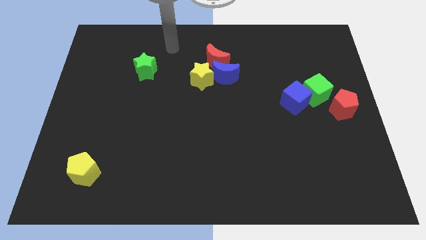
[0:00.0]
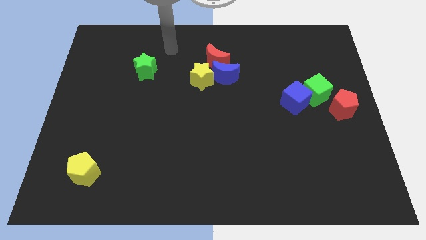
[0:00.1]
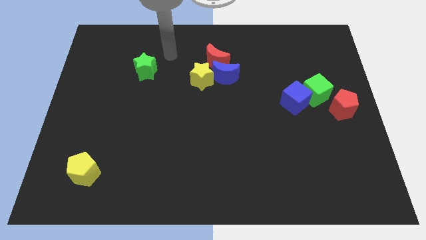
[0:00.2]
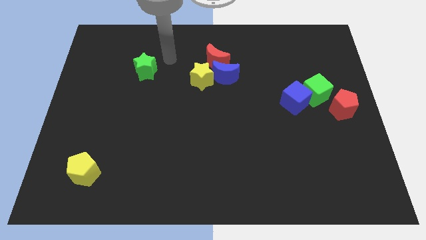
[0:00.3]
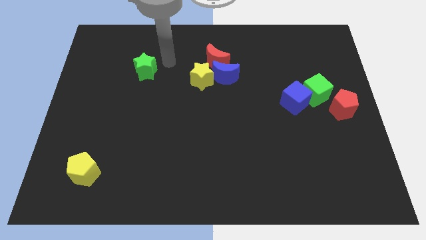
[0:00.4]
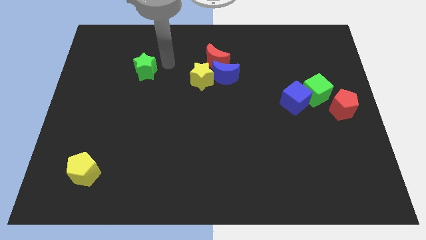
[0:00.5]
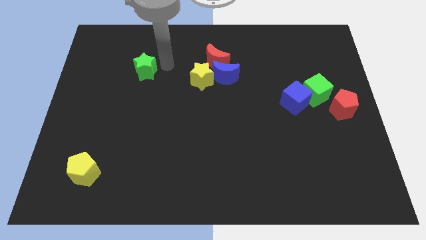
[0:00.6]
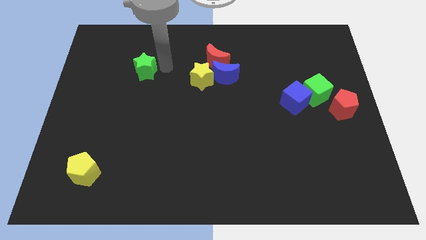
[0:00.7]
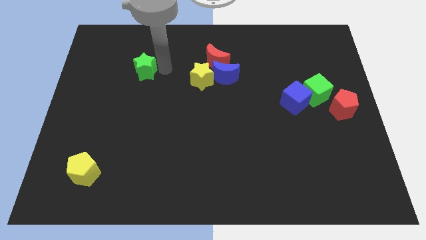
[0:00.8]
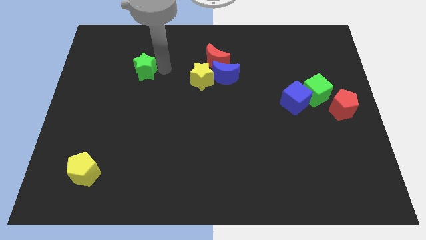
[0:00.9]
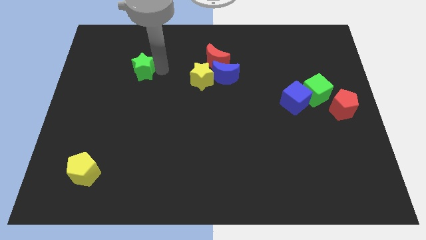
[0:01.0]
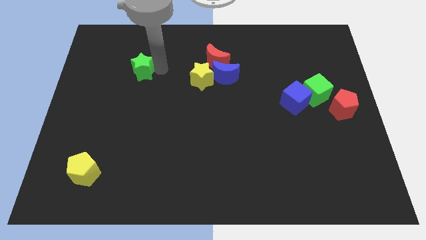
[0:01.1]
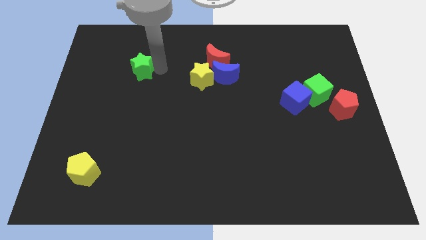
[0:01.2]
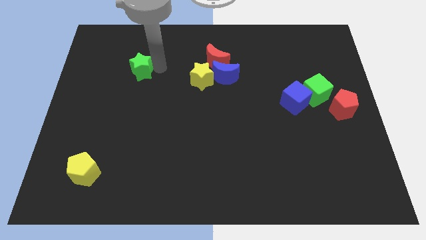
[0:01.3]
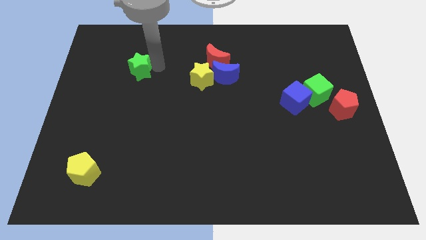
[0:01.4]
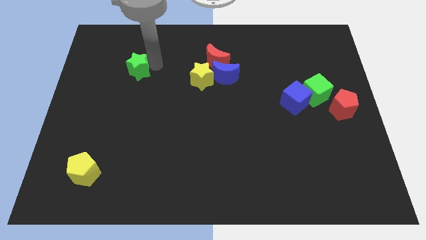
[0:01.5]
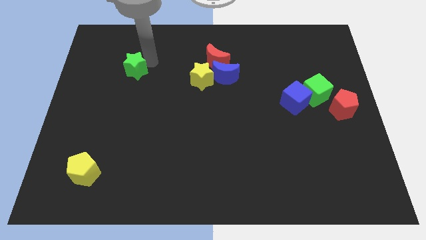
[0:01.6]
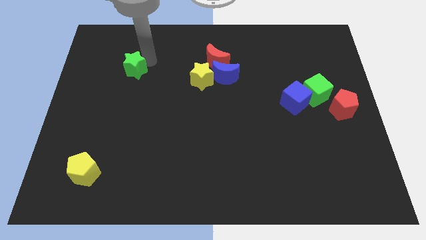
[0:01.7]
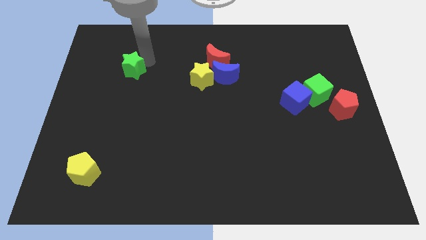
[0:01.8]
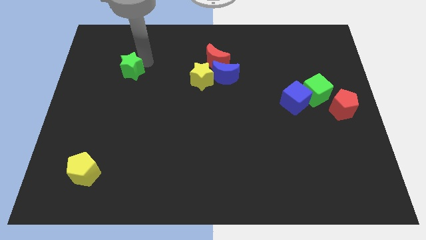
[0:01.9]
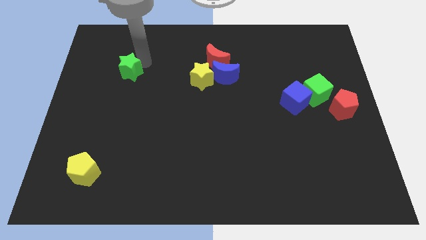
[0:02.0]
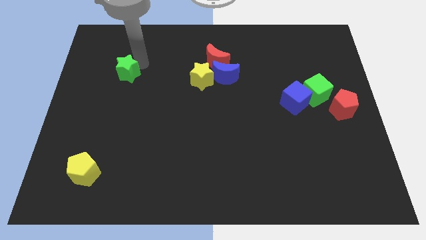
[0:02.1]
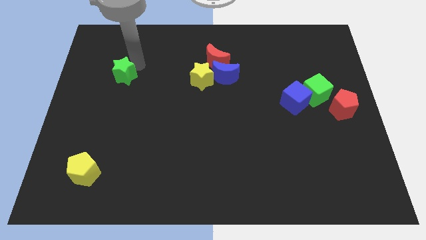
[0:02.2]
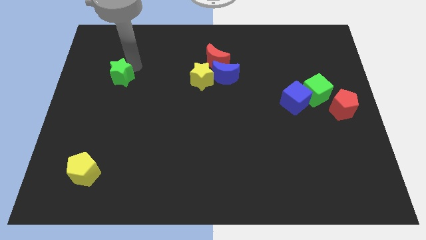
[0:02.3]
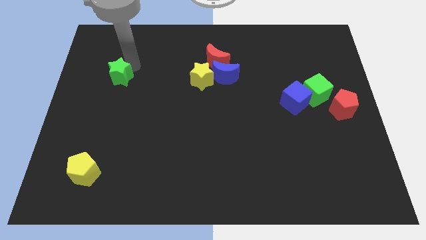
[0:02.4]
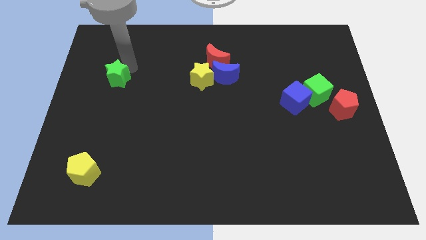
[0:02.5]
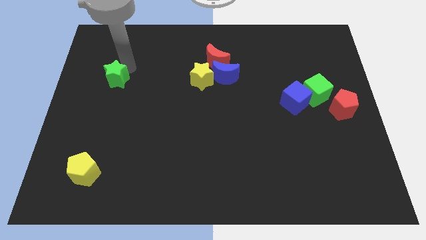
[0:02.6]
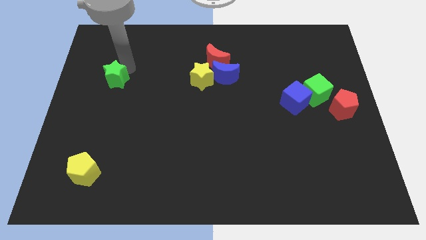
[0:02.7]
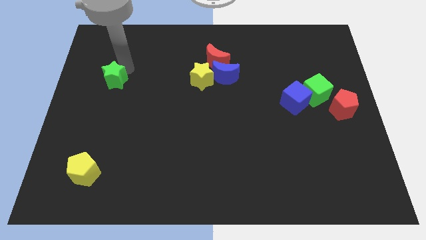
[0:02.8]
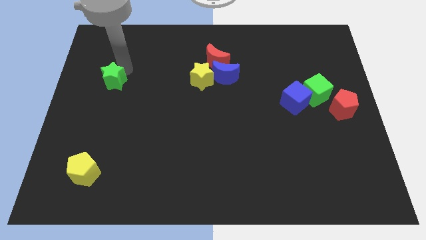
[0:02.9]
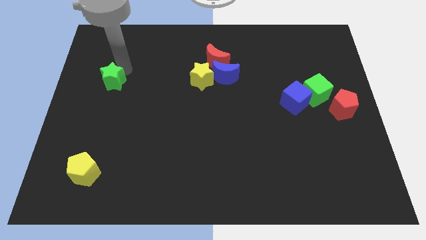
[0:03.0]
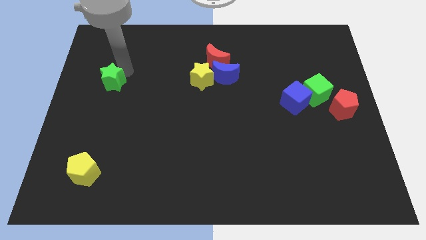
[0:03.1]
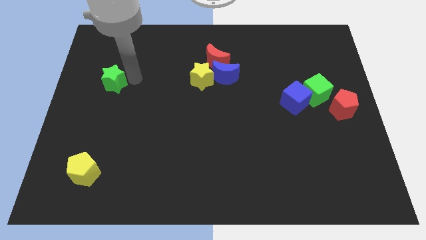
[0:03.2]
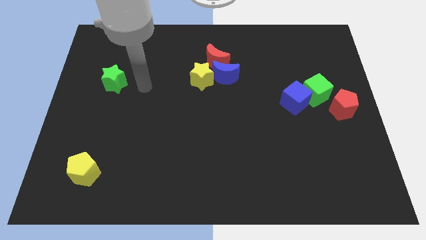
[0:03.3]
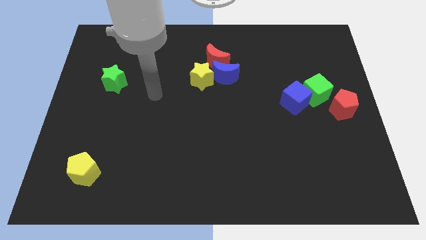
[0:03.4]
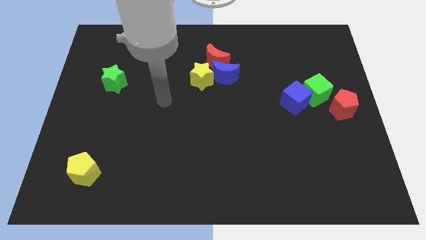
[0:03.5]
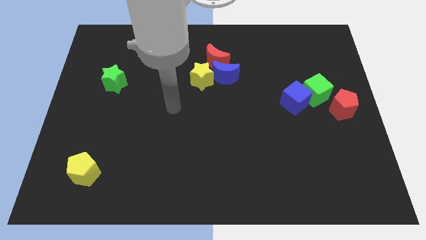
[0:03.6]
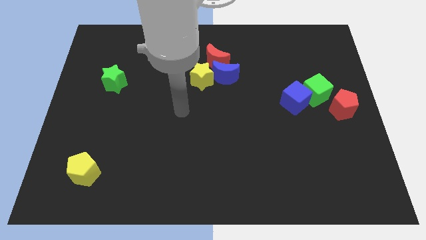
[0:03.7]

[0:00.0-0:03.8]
move the green star vertically above the yellow pentagon

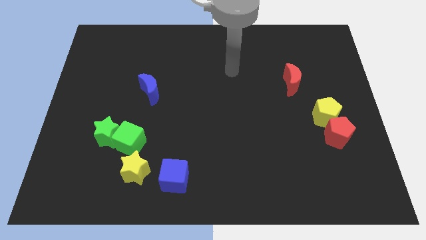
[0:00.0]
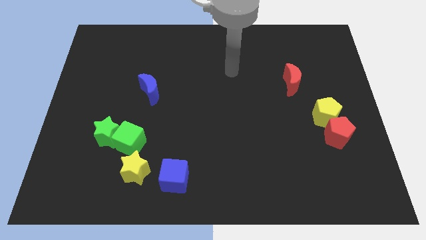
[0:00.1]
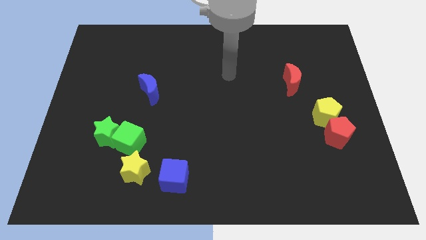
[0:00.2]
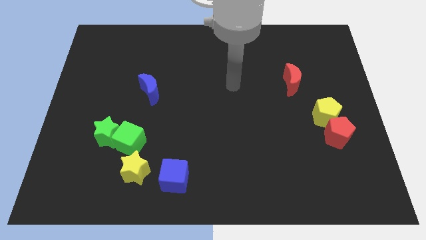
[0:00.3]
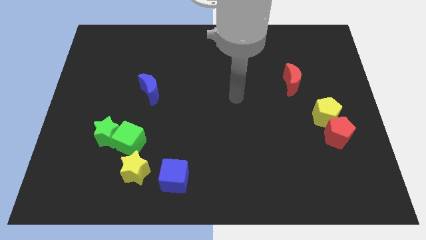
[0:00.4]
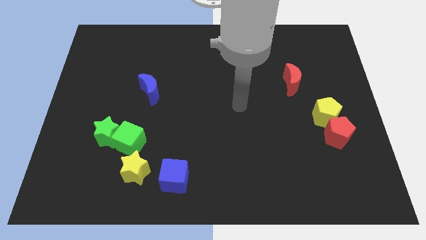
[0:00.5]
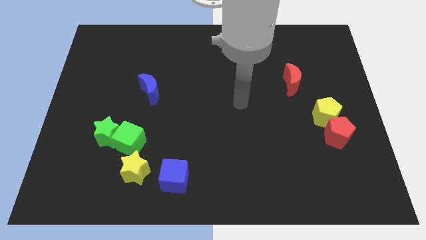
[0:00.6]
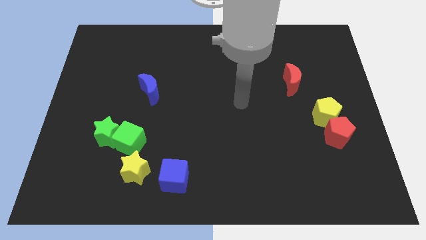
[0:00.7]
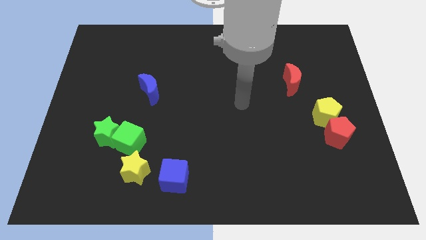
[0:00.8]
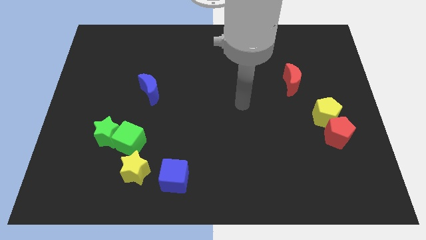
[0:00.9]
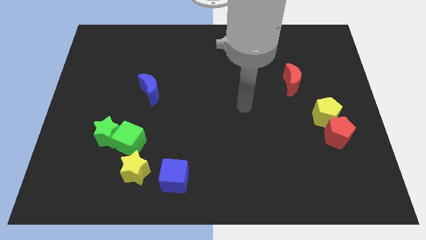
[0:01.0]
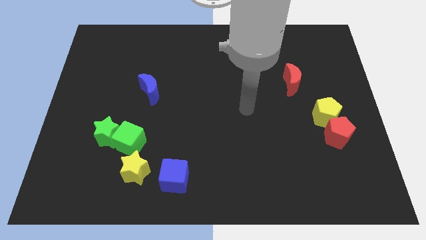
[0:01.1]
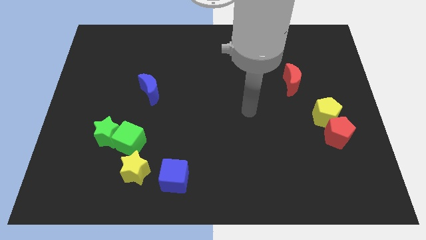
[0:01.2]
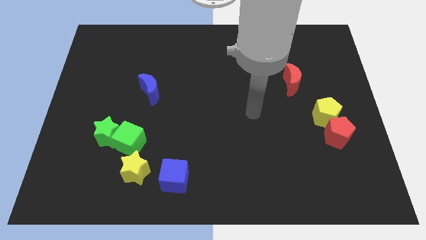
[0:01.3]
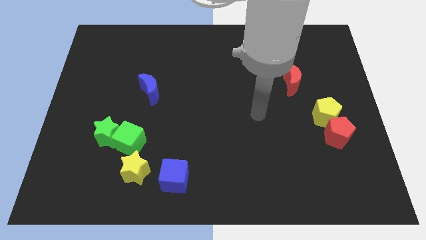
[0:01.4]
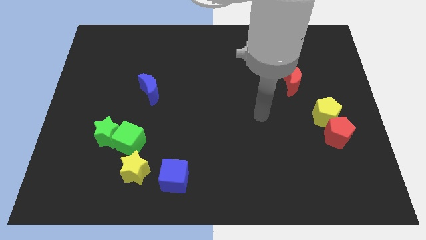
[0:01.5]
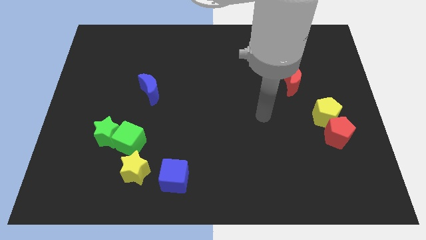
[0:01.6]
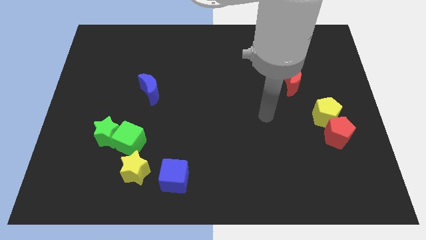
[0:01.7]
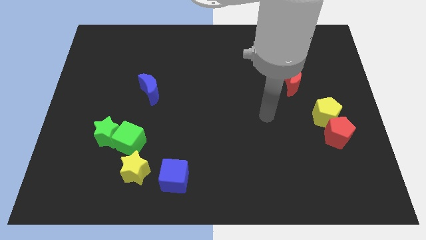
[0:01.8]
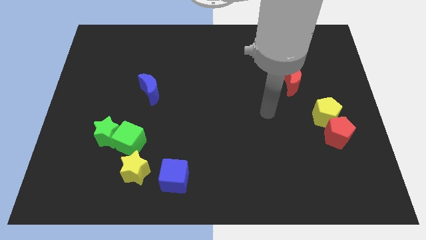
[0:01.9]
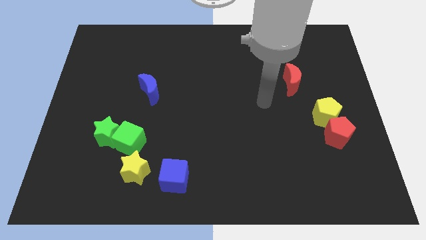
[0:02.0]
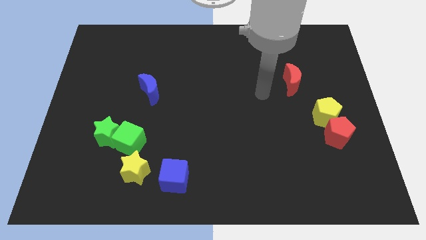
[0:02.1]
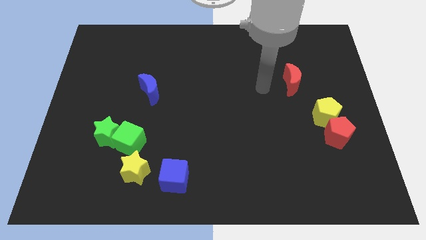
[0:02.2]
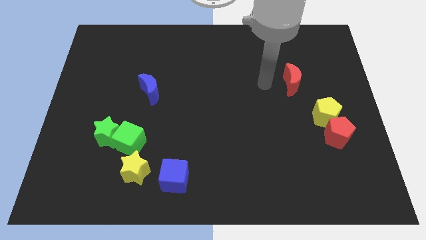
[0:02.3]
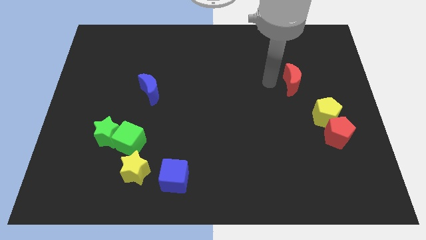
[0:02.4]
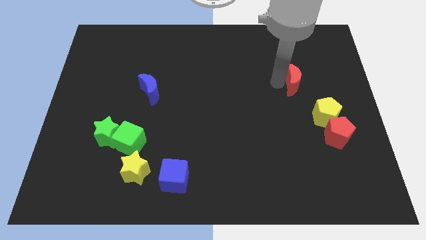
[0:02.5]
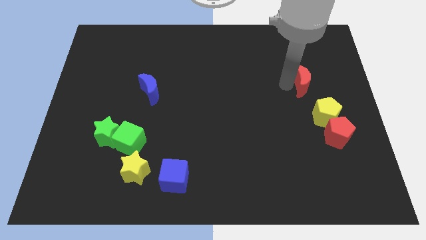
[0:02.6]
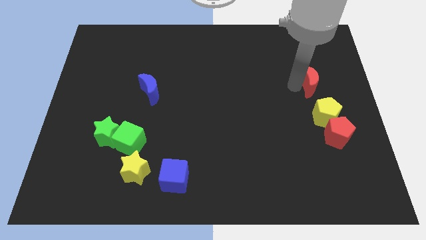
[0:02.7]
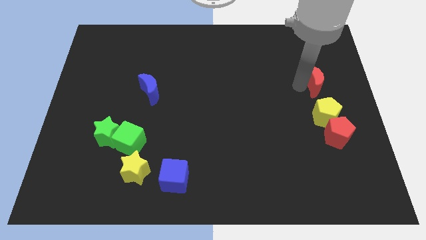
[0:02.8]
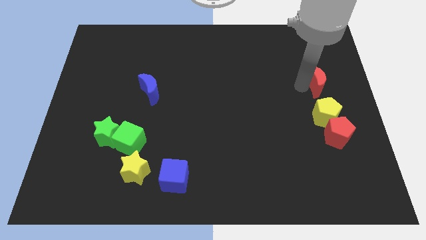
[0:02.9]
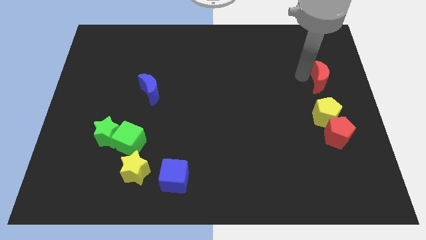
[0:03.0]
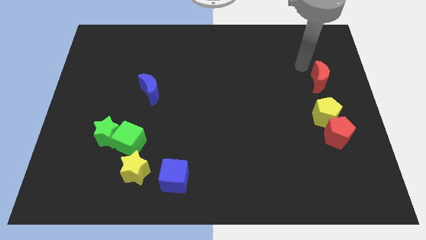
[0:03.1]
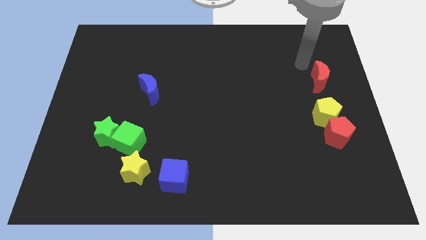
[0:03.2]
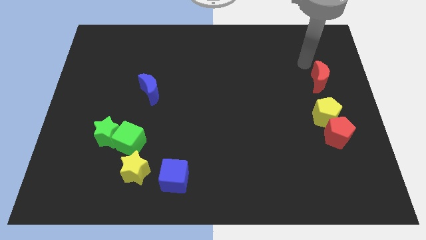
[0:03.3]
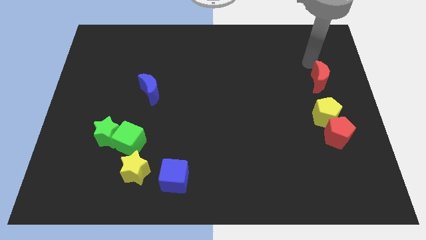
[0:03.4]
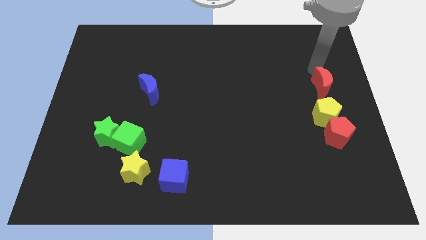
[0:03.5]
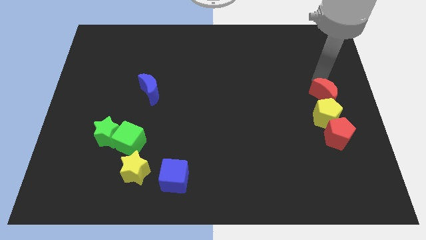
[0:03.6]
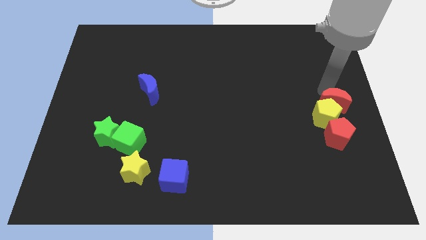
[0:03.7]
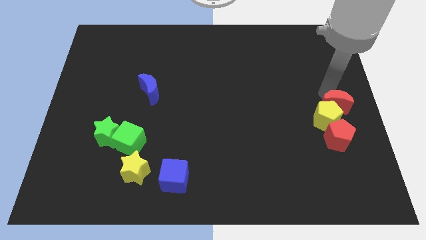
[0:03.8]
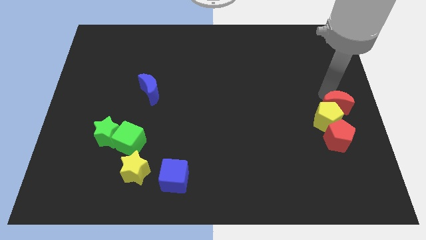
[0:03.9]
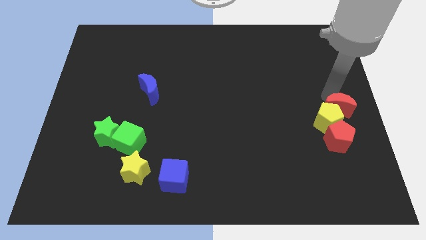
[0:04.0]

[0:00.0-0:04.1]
push the red moon into the yellow pentagon

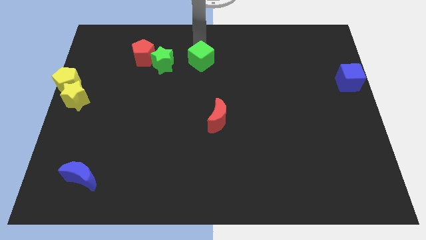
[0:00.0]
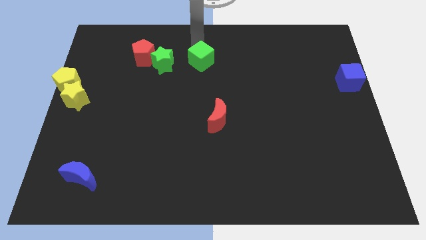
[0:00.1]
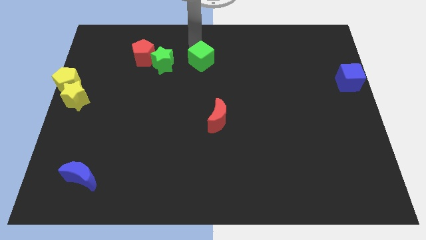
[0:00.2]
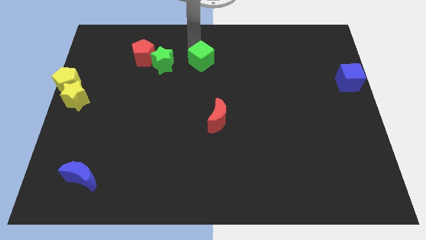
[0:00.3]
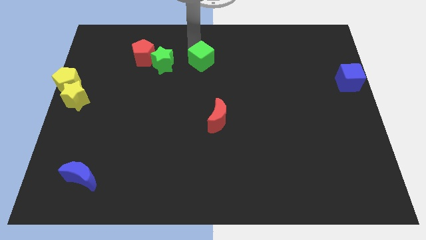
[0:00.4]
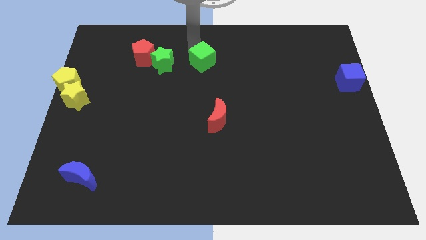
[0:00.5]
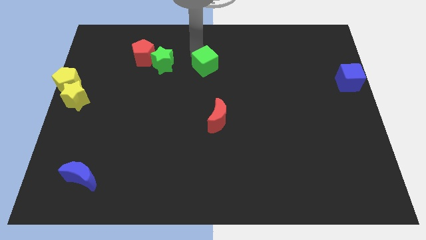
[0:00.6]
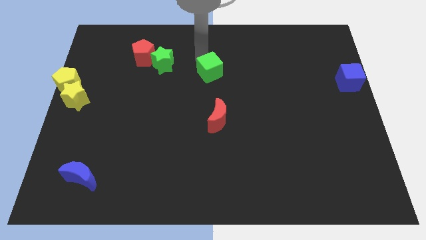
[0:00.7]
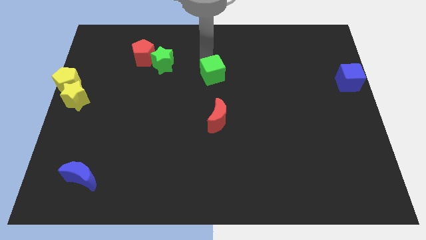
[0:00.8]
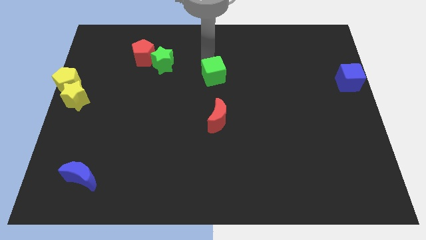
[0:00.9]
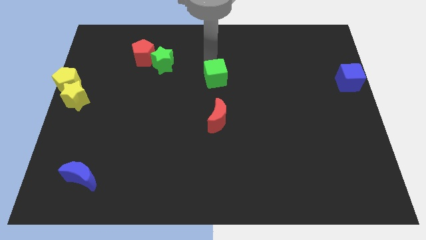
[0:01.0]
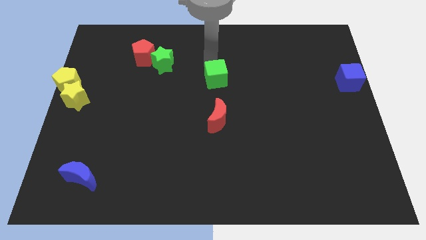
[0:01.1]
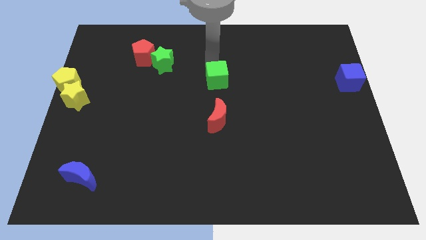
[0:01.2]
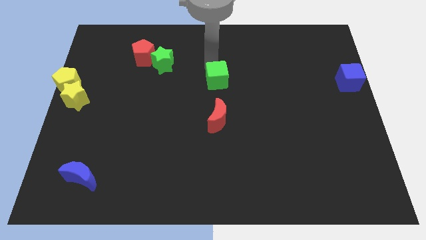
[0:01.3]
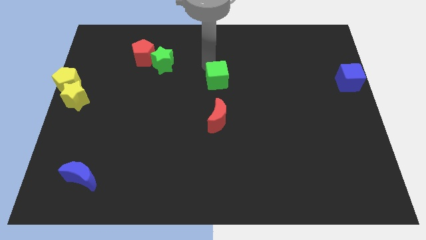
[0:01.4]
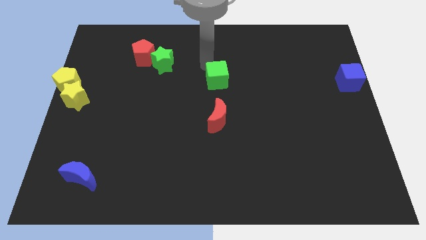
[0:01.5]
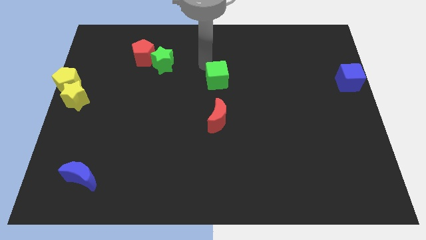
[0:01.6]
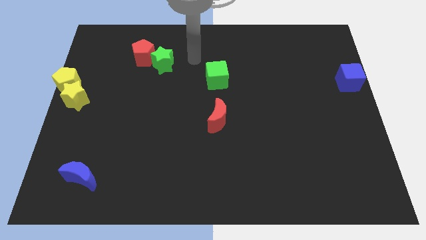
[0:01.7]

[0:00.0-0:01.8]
put the green cube diagonal to the left of the blue cube
